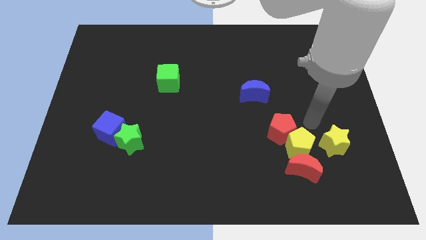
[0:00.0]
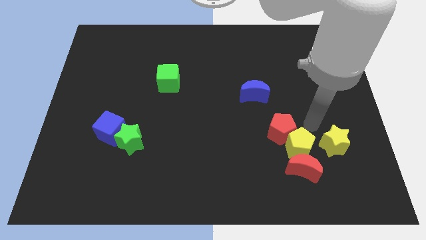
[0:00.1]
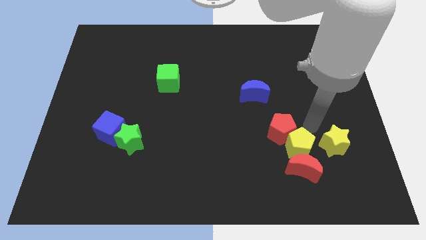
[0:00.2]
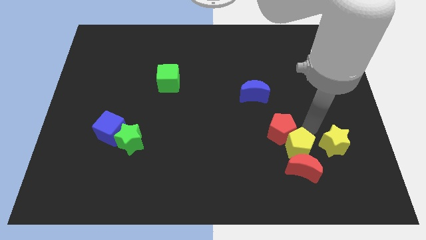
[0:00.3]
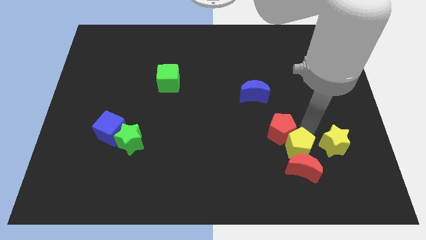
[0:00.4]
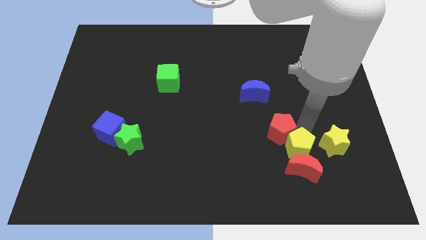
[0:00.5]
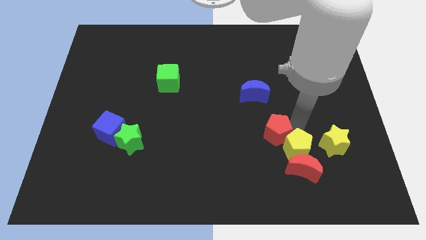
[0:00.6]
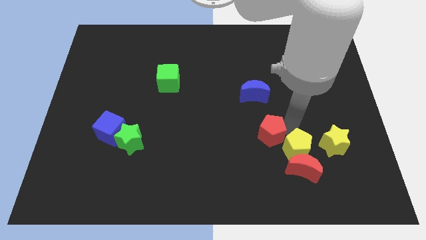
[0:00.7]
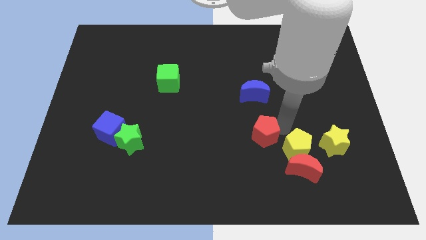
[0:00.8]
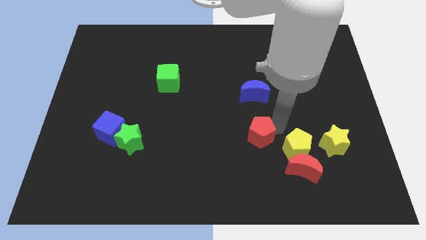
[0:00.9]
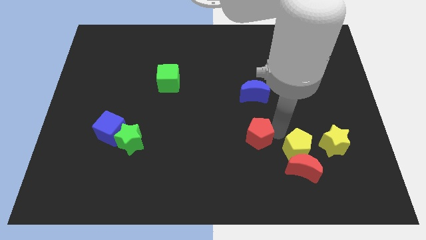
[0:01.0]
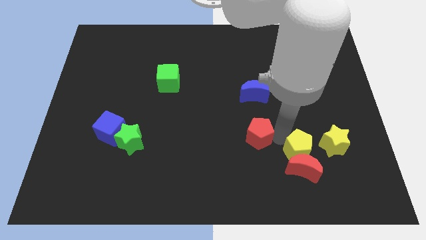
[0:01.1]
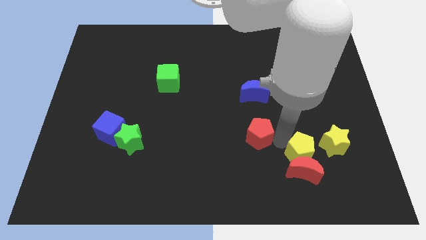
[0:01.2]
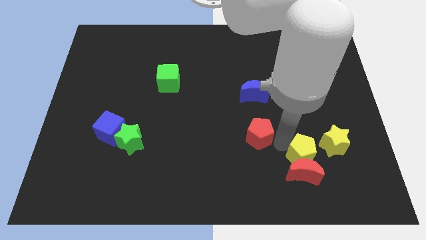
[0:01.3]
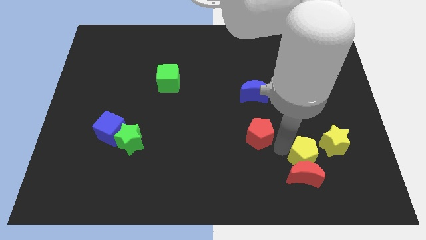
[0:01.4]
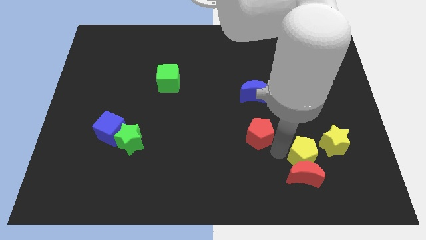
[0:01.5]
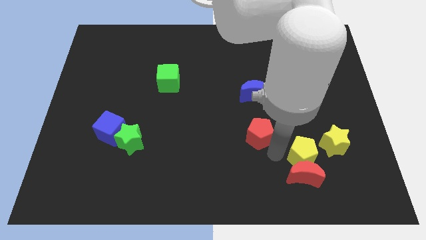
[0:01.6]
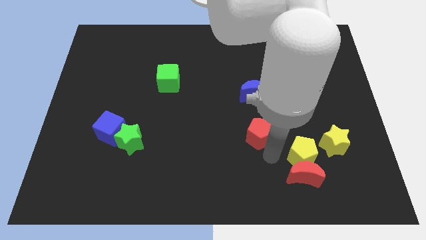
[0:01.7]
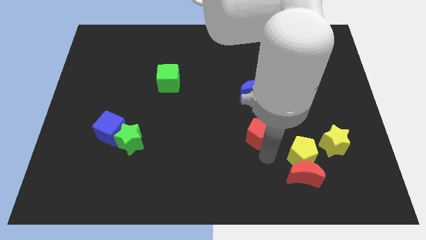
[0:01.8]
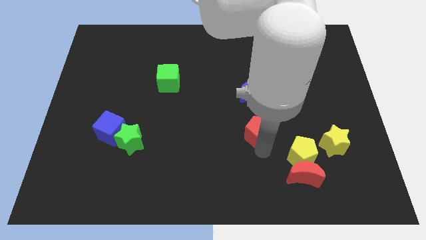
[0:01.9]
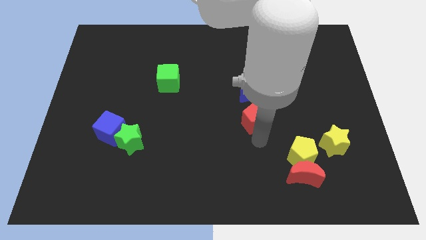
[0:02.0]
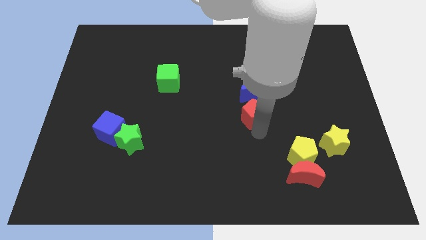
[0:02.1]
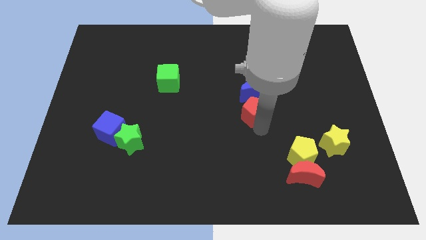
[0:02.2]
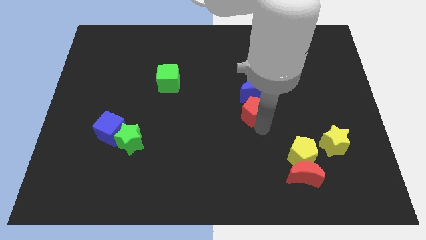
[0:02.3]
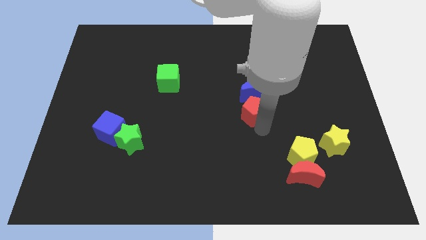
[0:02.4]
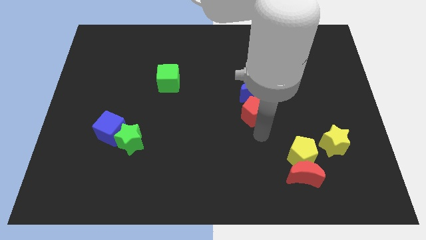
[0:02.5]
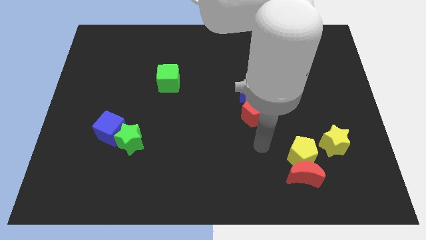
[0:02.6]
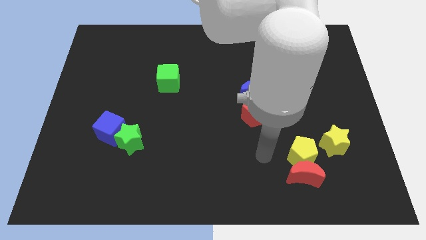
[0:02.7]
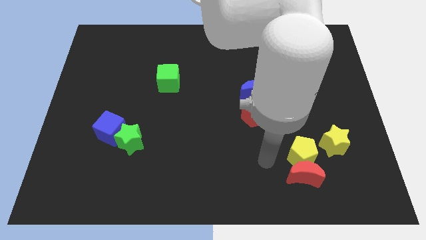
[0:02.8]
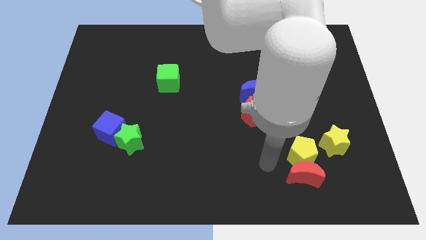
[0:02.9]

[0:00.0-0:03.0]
separate the red and yellow pentagons

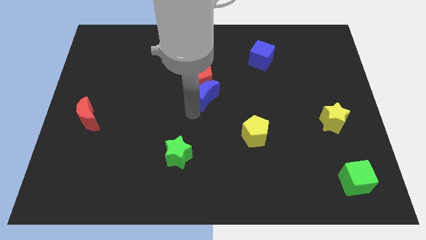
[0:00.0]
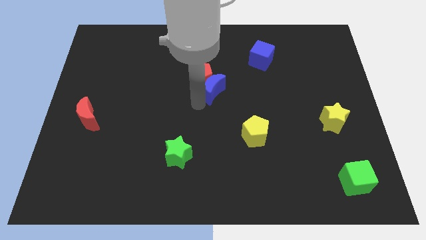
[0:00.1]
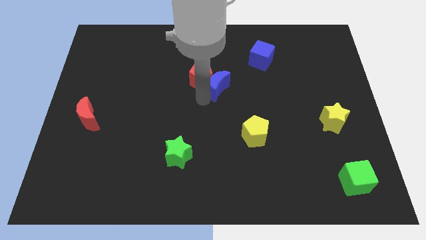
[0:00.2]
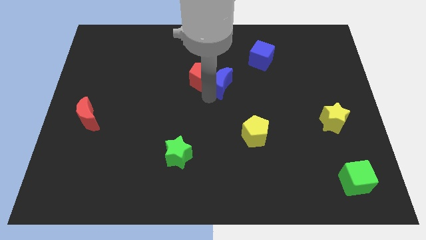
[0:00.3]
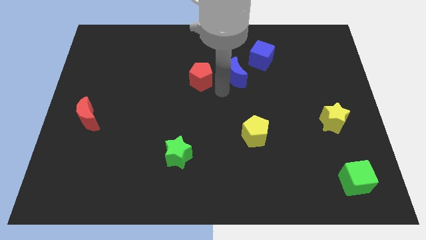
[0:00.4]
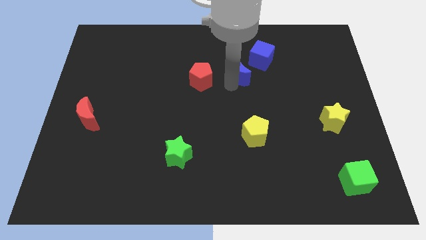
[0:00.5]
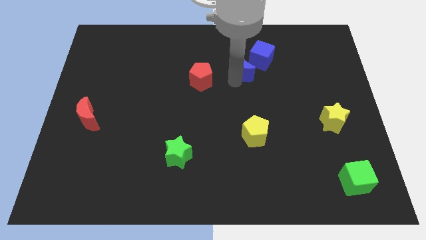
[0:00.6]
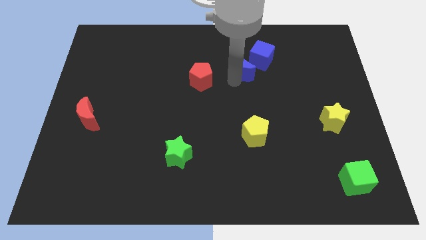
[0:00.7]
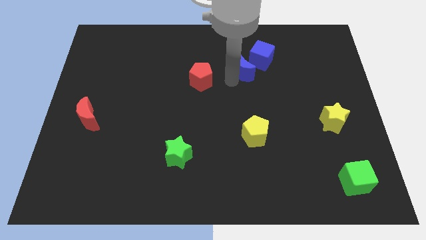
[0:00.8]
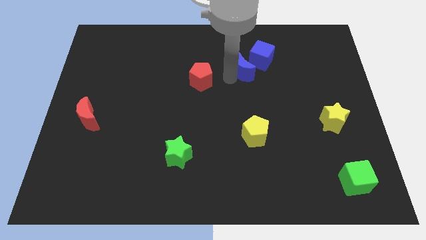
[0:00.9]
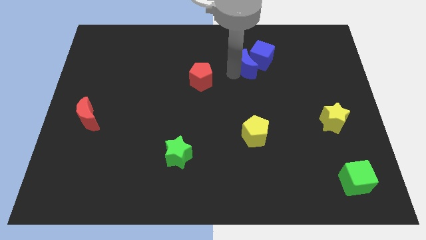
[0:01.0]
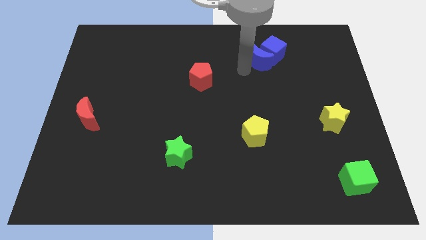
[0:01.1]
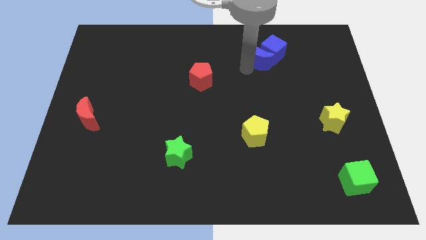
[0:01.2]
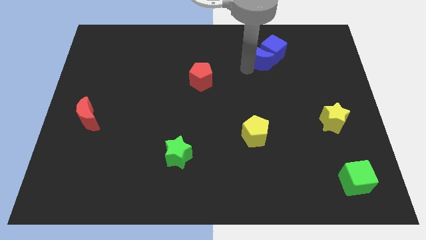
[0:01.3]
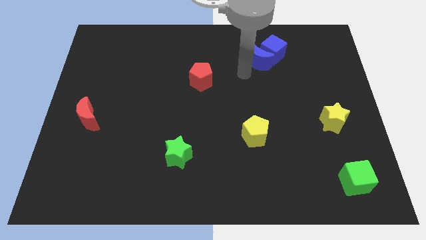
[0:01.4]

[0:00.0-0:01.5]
push the blue cube with the help of the blue crescent towards the top right corner of the board

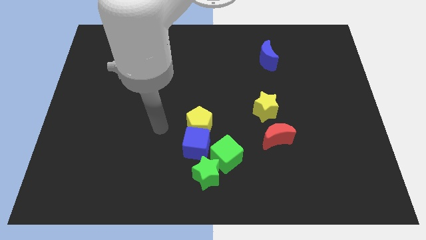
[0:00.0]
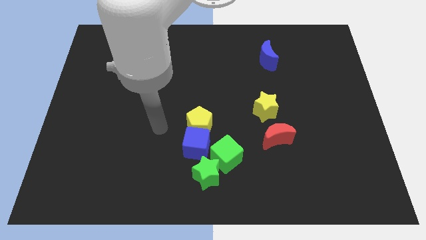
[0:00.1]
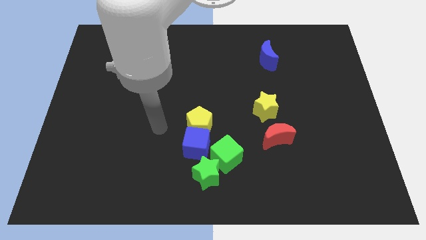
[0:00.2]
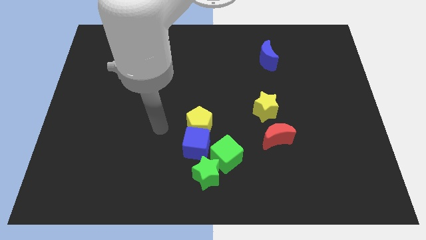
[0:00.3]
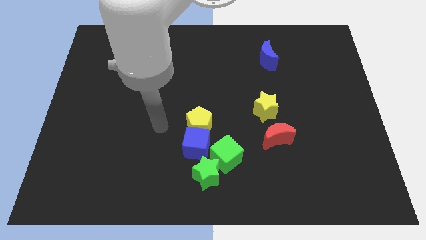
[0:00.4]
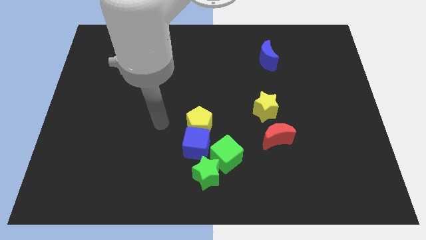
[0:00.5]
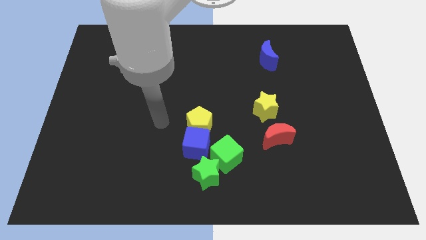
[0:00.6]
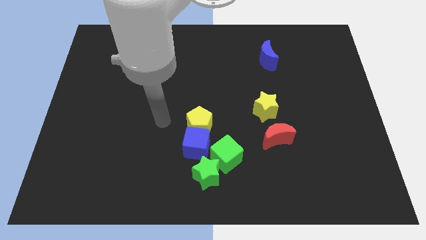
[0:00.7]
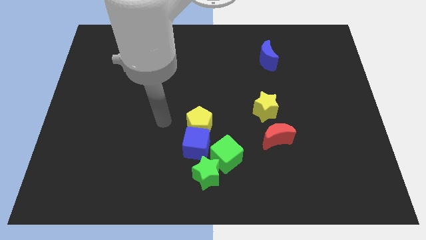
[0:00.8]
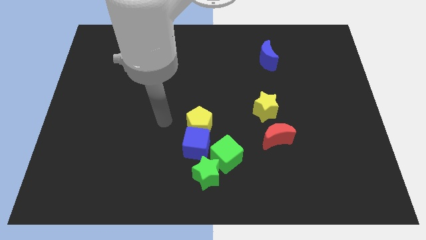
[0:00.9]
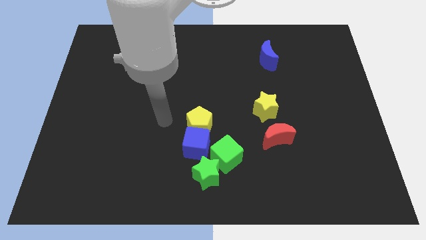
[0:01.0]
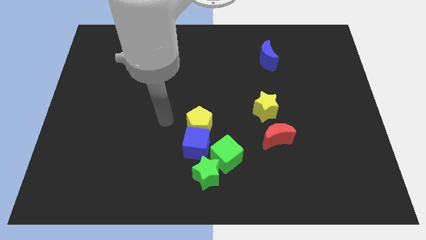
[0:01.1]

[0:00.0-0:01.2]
move your hand slightly upwards

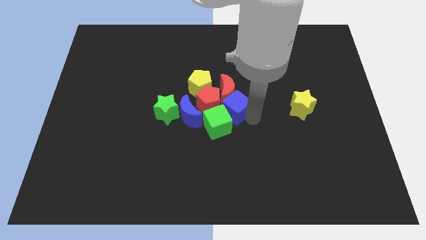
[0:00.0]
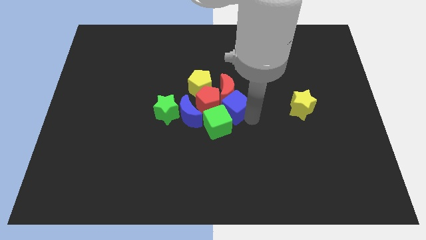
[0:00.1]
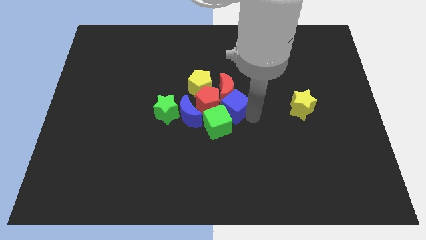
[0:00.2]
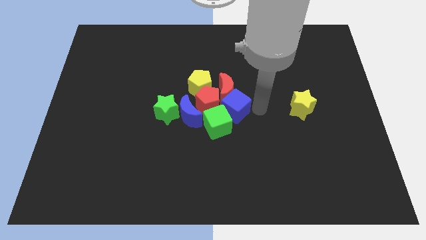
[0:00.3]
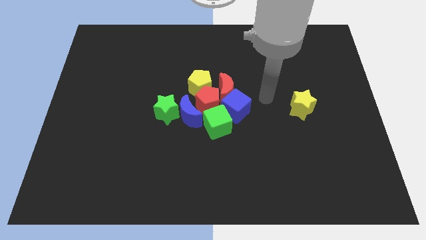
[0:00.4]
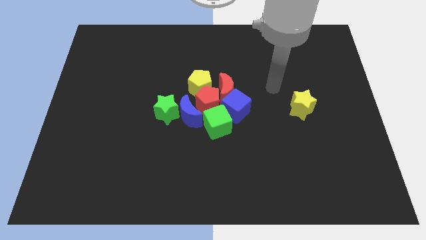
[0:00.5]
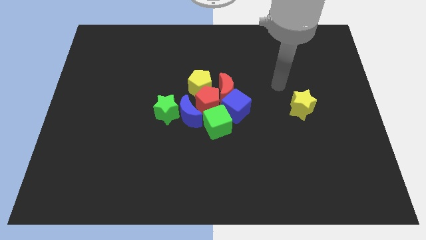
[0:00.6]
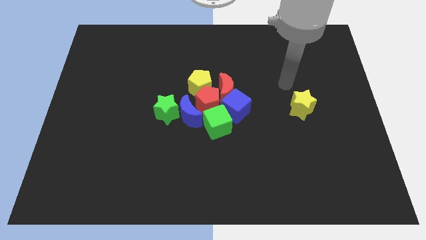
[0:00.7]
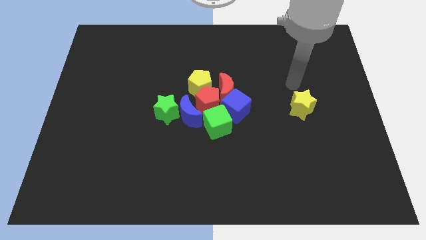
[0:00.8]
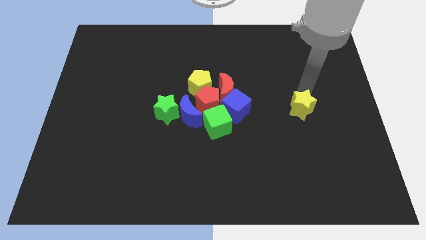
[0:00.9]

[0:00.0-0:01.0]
place the arm above the yellow star

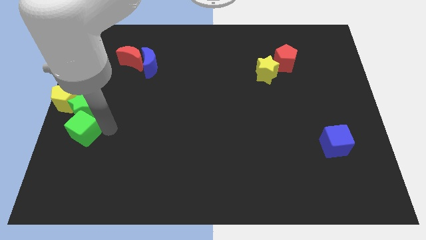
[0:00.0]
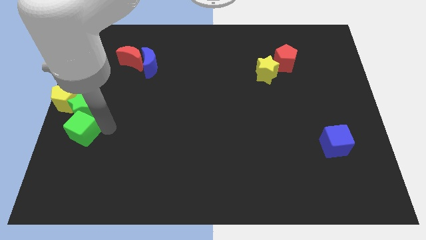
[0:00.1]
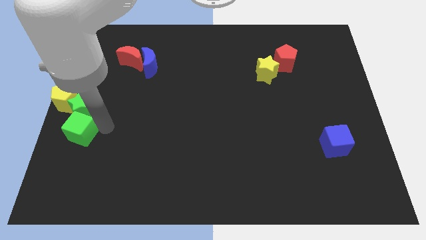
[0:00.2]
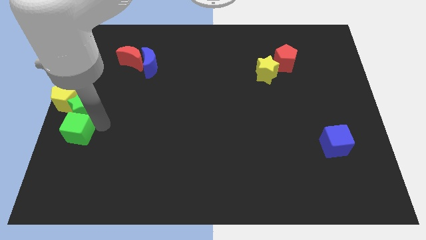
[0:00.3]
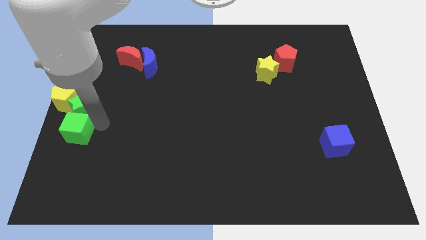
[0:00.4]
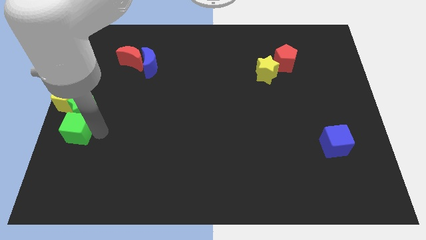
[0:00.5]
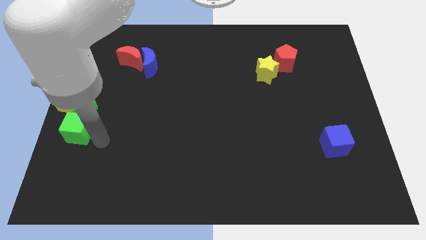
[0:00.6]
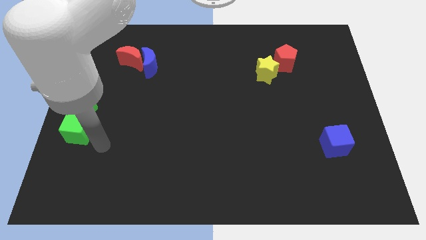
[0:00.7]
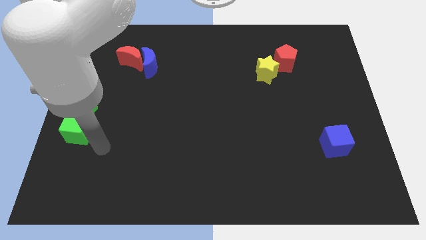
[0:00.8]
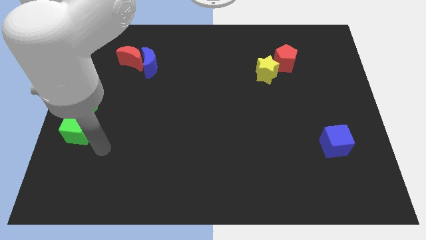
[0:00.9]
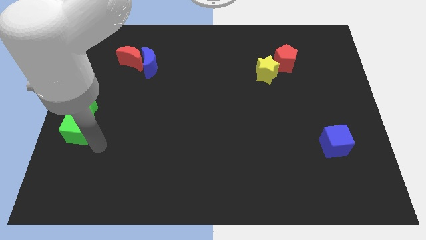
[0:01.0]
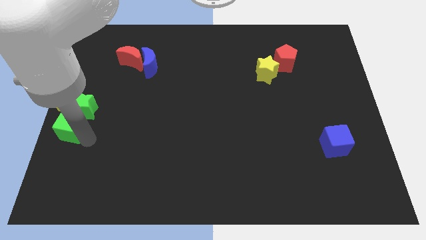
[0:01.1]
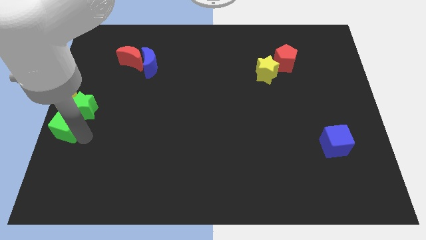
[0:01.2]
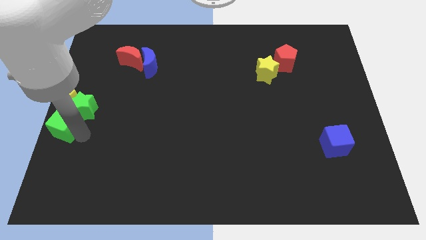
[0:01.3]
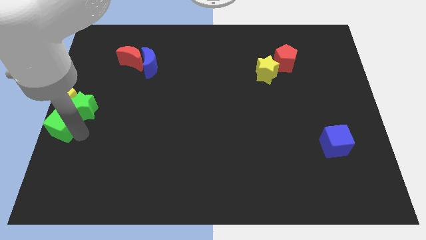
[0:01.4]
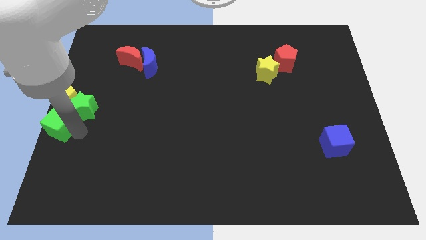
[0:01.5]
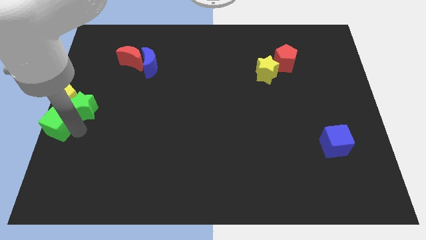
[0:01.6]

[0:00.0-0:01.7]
move the green cube below the yellow pentagon

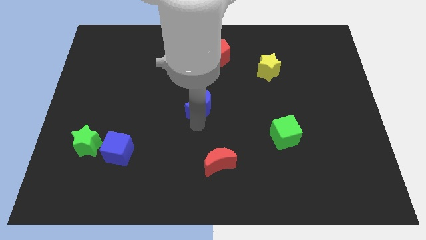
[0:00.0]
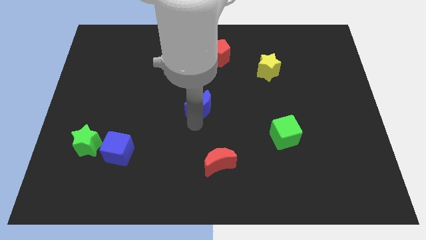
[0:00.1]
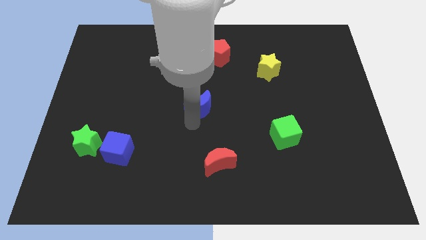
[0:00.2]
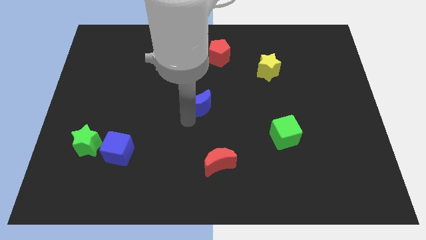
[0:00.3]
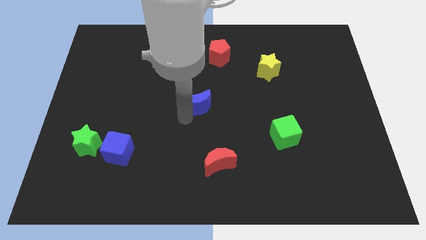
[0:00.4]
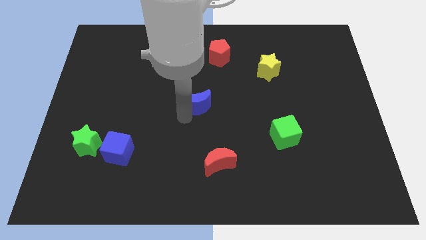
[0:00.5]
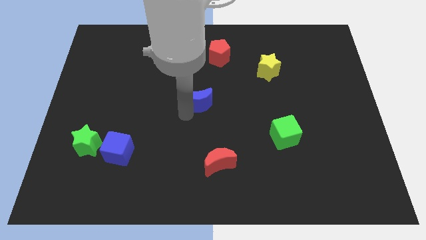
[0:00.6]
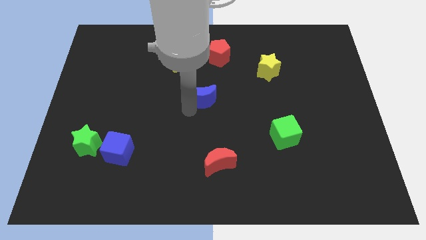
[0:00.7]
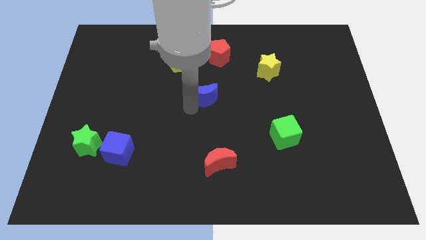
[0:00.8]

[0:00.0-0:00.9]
move the blue moon to the center of the board
